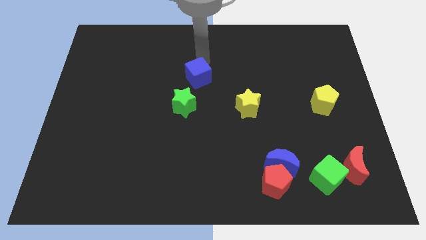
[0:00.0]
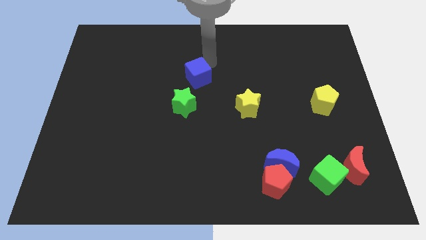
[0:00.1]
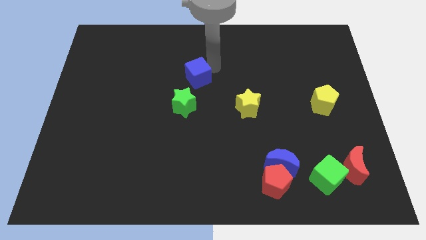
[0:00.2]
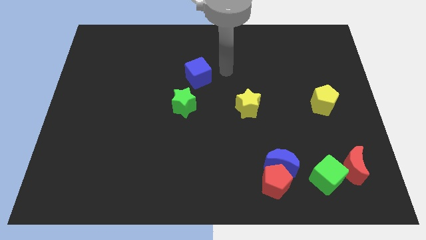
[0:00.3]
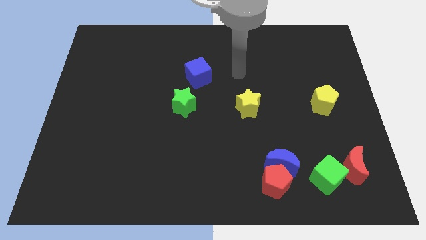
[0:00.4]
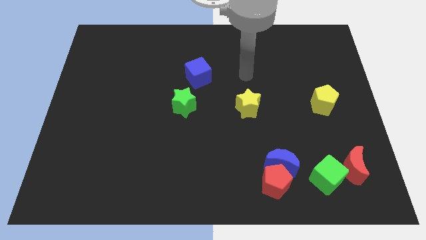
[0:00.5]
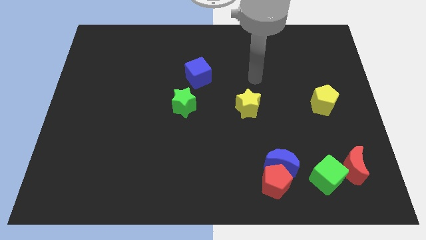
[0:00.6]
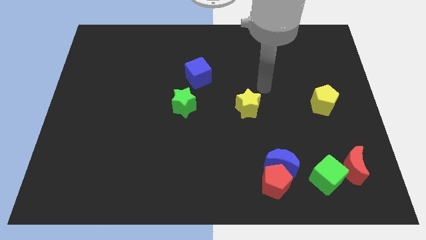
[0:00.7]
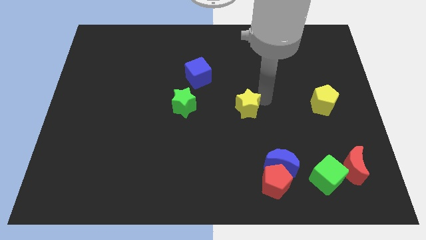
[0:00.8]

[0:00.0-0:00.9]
go away from the blue cube

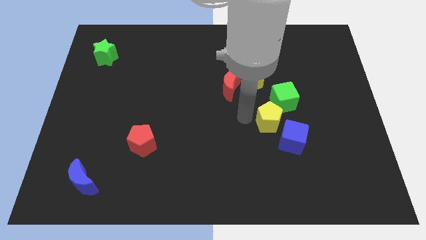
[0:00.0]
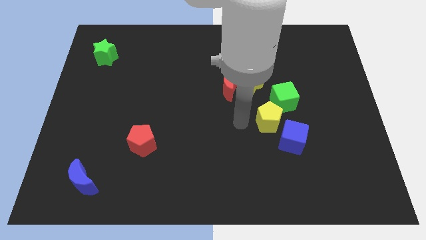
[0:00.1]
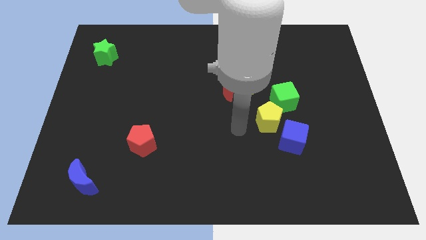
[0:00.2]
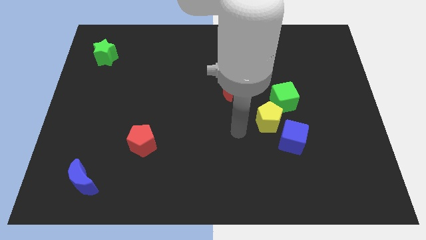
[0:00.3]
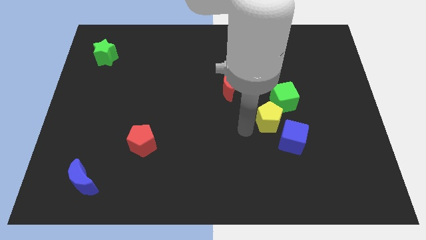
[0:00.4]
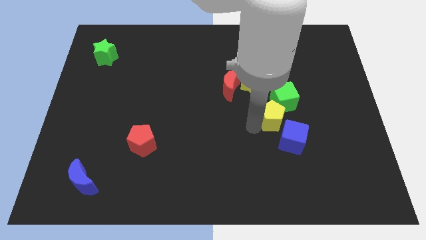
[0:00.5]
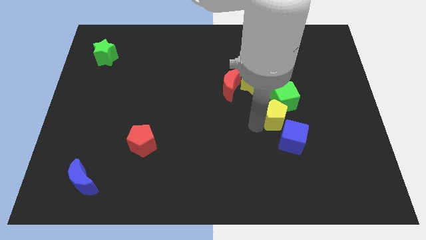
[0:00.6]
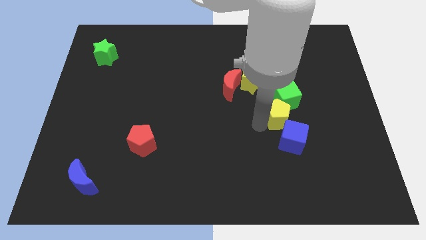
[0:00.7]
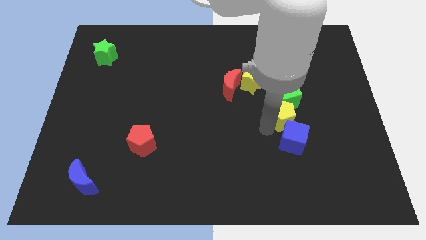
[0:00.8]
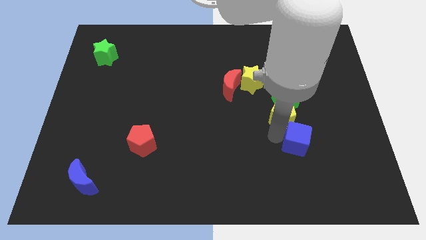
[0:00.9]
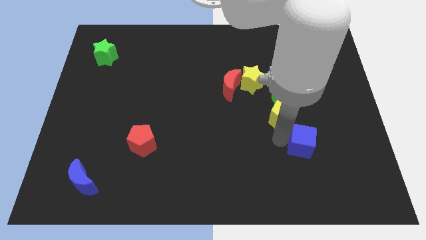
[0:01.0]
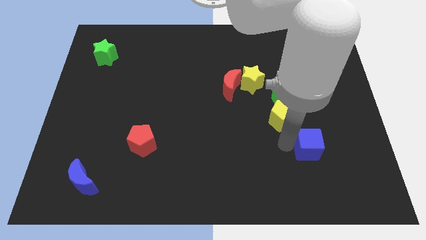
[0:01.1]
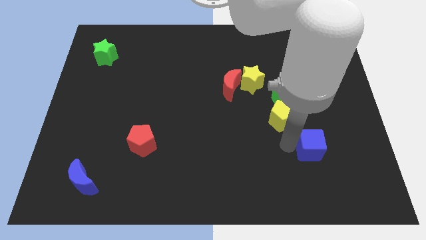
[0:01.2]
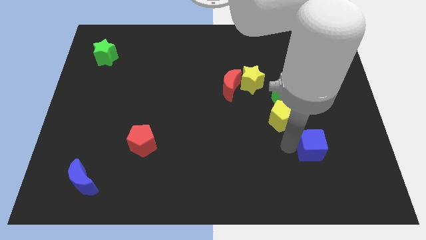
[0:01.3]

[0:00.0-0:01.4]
place yellow pentagon in between blue cube and green cube

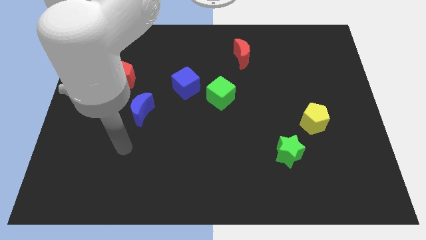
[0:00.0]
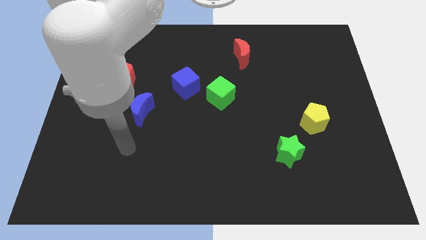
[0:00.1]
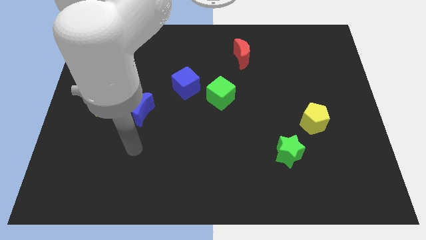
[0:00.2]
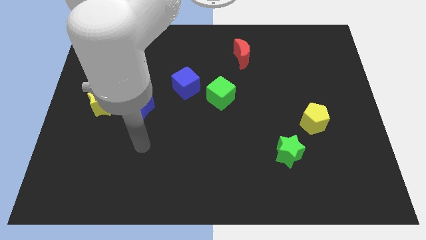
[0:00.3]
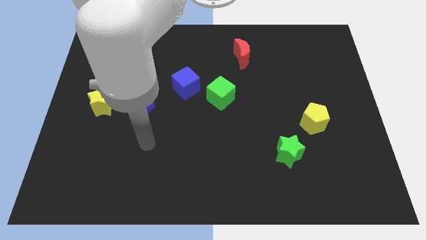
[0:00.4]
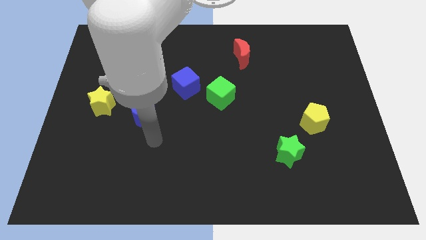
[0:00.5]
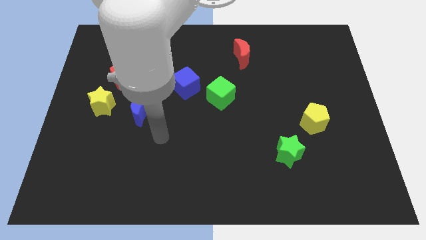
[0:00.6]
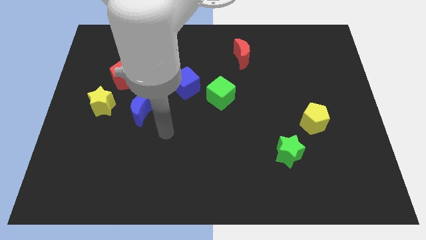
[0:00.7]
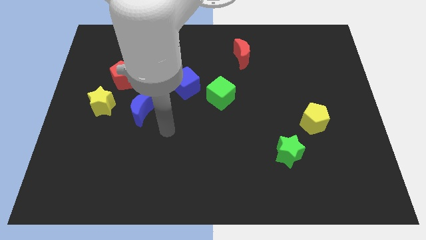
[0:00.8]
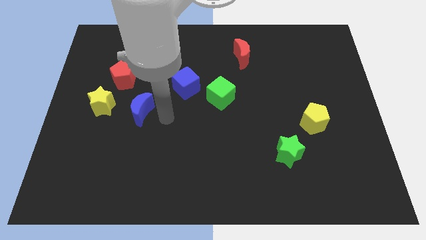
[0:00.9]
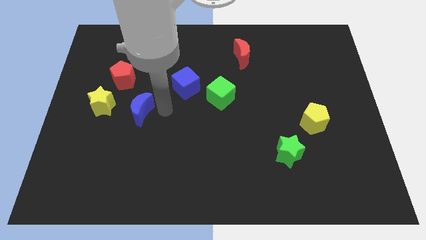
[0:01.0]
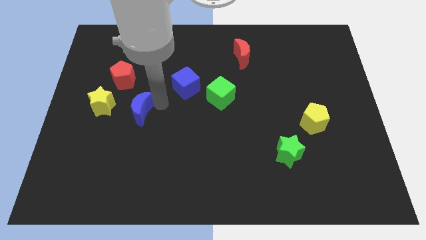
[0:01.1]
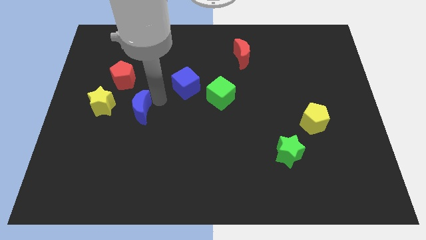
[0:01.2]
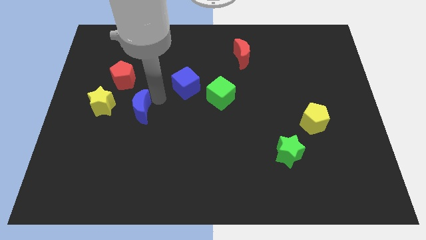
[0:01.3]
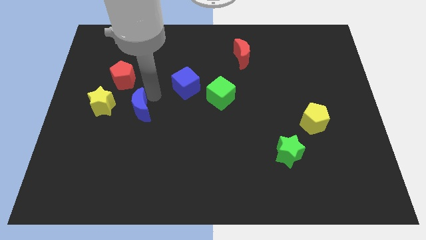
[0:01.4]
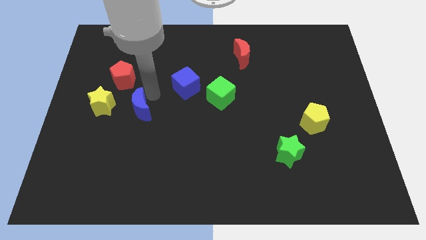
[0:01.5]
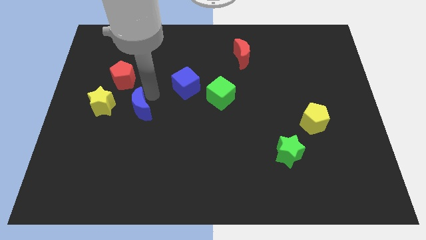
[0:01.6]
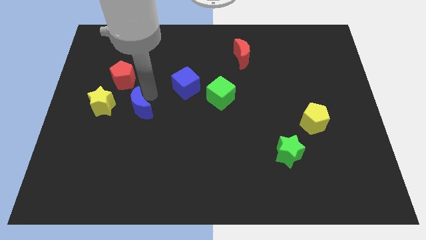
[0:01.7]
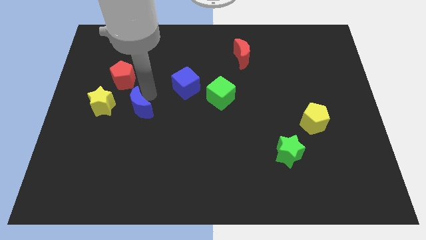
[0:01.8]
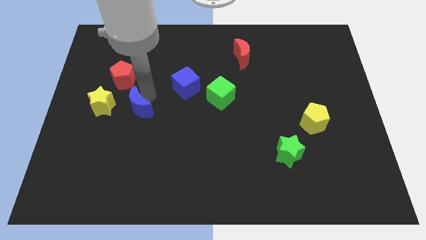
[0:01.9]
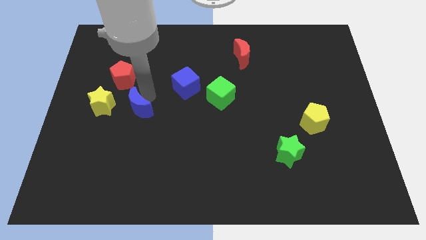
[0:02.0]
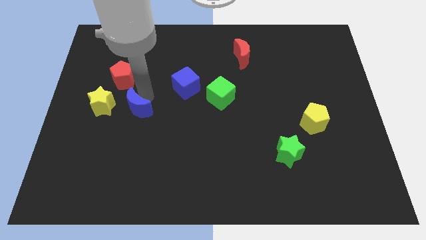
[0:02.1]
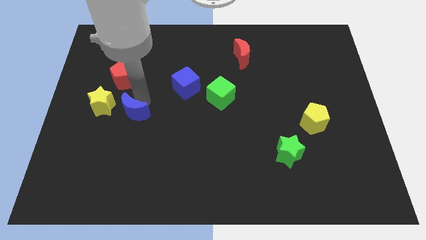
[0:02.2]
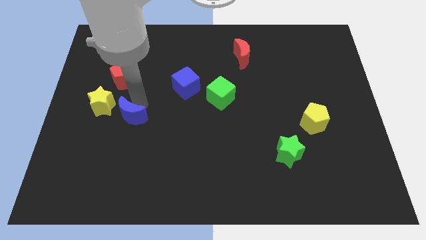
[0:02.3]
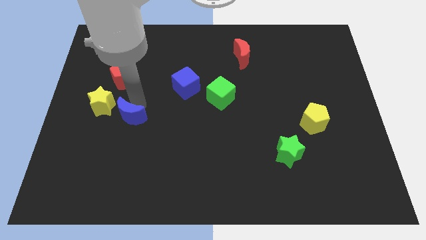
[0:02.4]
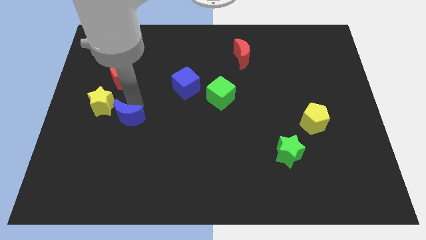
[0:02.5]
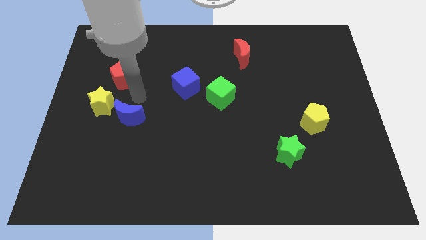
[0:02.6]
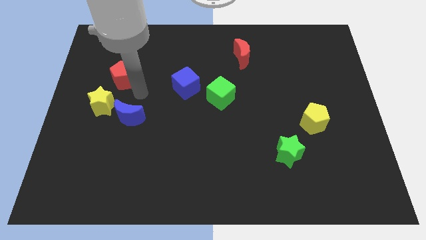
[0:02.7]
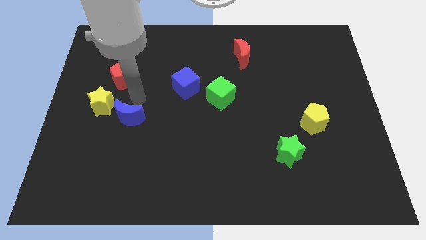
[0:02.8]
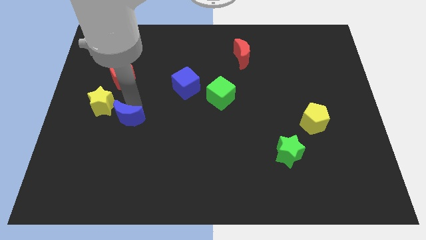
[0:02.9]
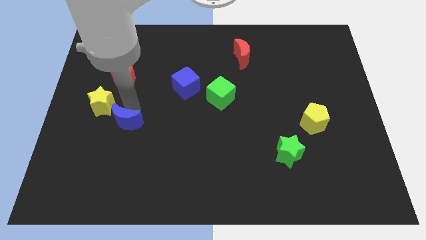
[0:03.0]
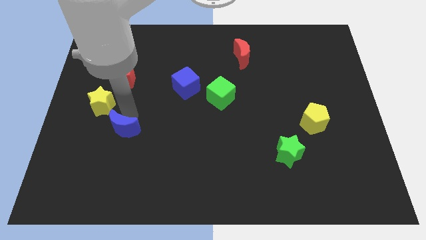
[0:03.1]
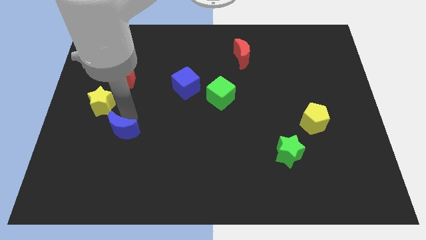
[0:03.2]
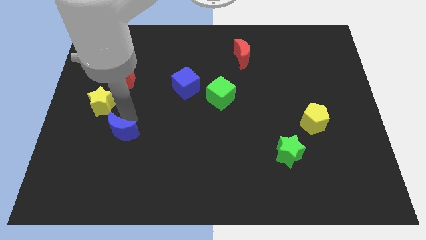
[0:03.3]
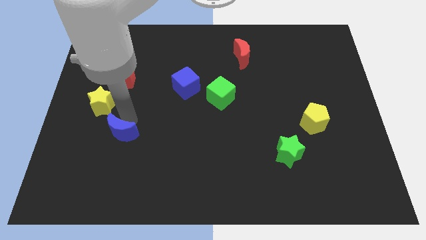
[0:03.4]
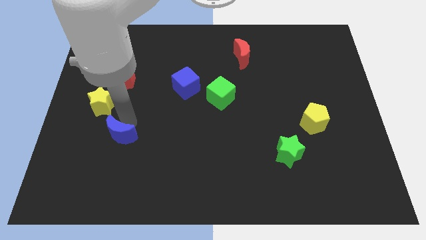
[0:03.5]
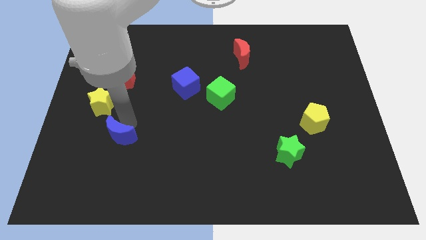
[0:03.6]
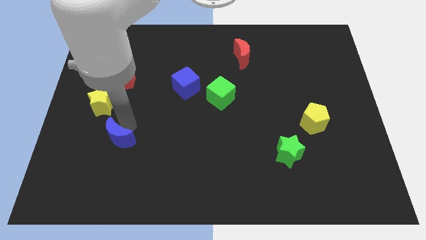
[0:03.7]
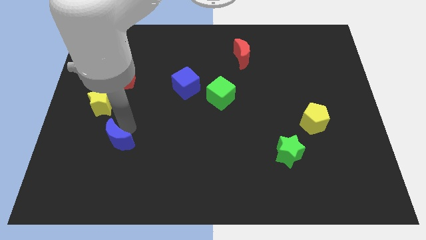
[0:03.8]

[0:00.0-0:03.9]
slide the blue moon diagonally to the bottom right of the yellow star

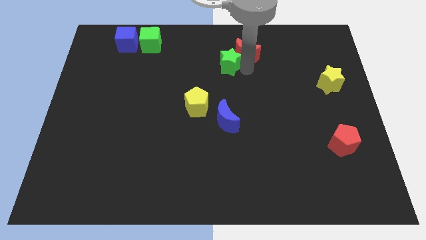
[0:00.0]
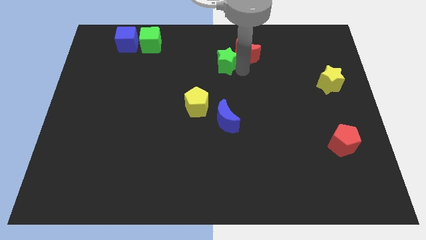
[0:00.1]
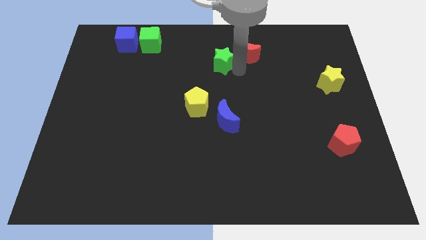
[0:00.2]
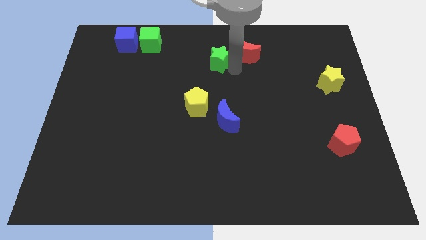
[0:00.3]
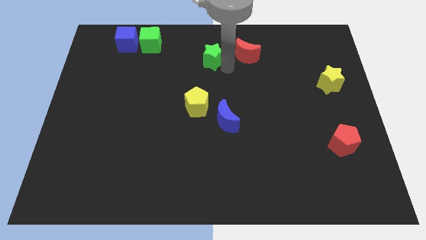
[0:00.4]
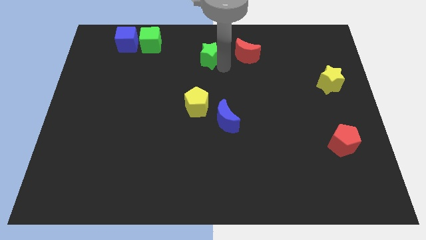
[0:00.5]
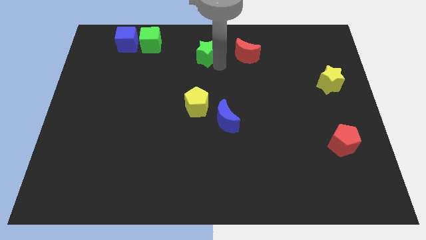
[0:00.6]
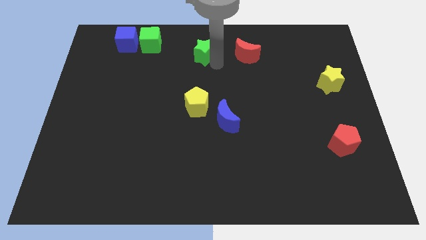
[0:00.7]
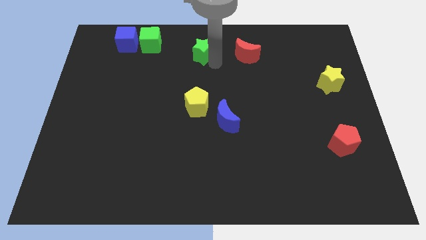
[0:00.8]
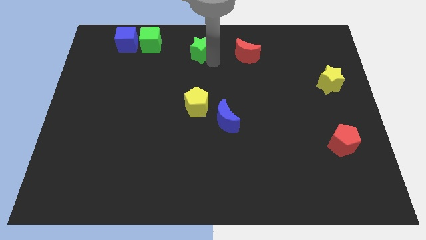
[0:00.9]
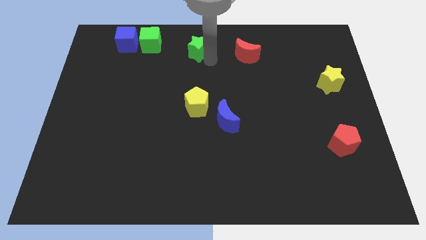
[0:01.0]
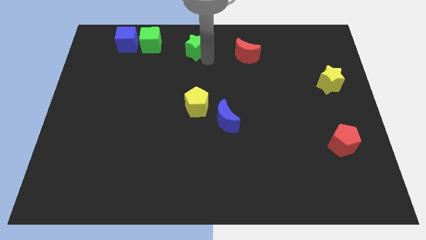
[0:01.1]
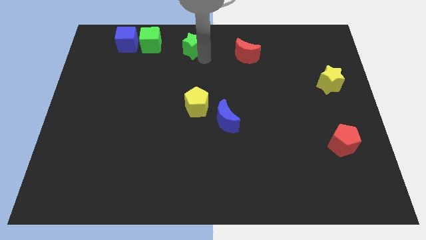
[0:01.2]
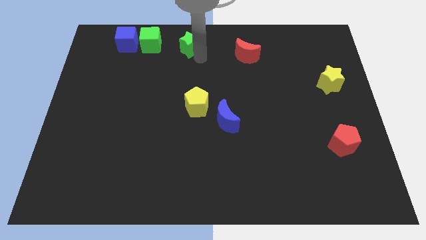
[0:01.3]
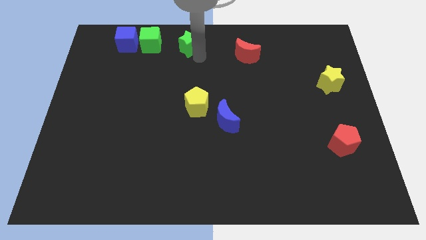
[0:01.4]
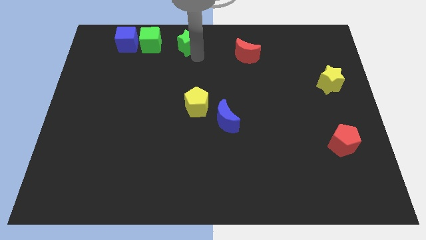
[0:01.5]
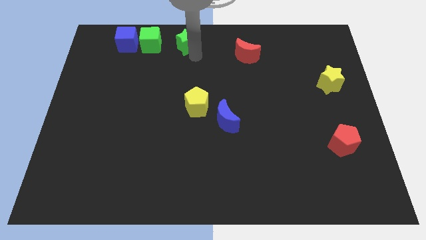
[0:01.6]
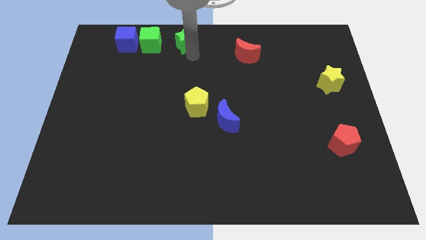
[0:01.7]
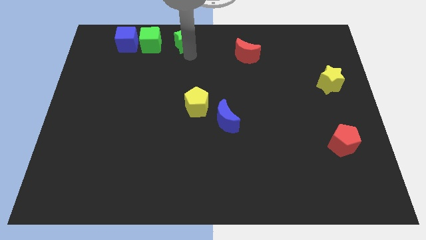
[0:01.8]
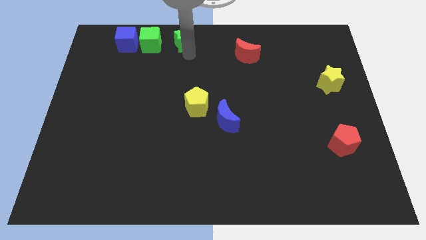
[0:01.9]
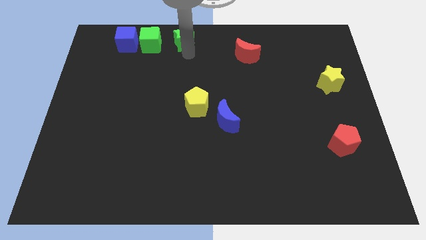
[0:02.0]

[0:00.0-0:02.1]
place green star to the right of green cube

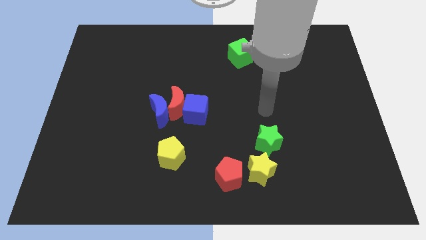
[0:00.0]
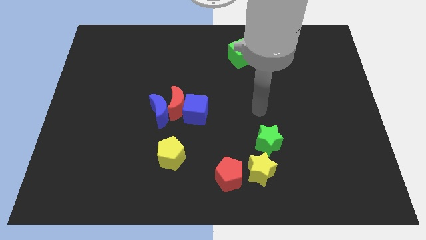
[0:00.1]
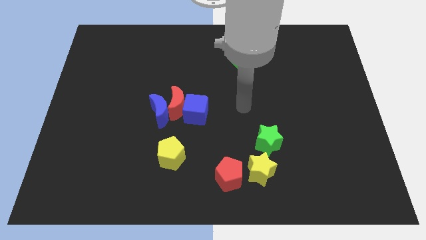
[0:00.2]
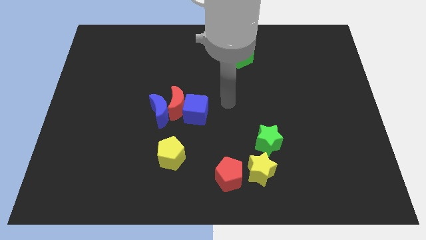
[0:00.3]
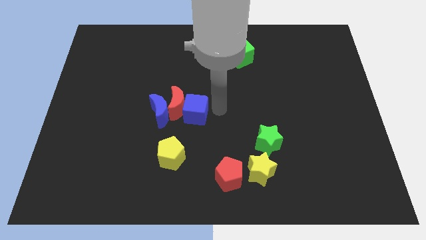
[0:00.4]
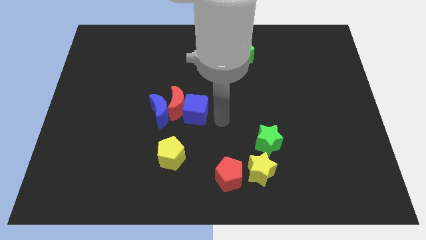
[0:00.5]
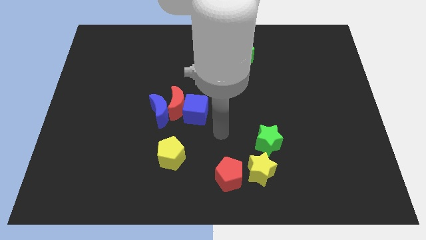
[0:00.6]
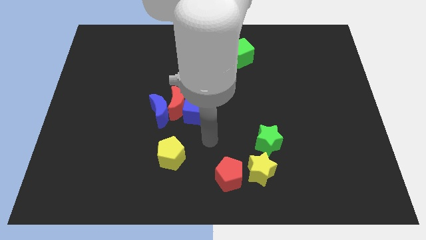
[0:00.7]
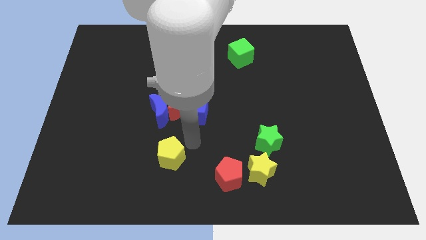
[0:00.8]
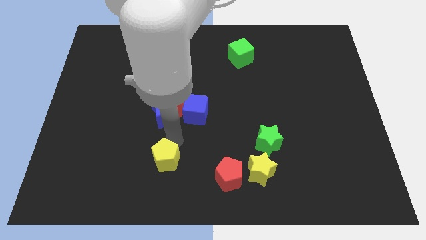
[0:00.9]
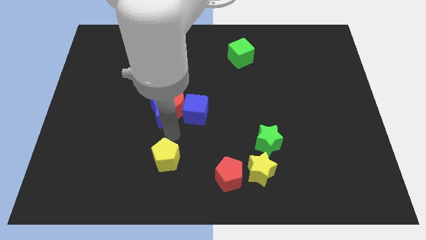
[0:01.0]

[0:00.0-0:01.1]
slightly move the yellow pentagon to the bottom of the board
